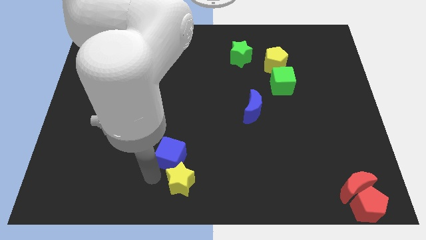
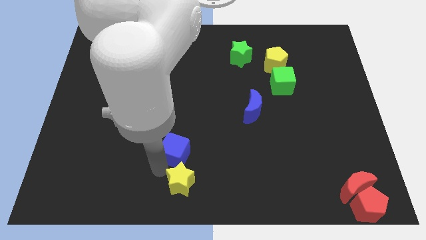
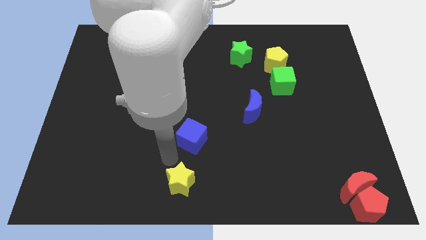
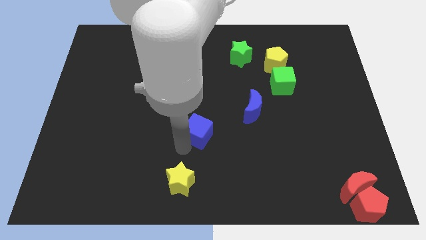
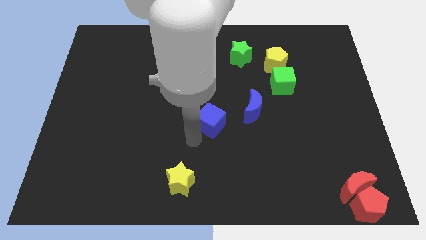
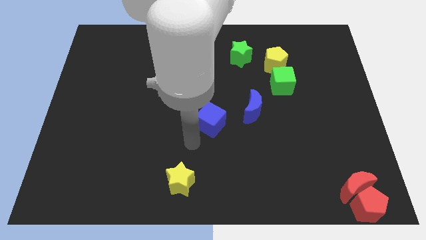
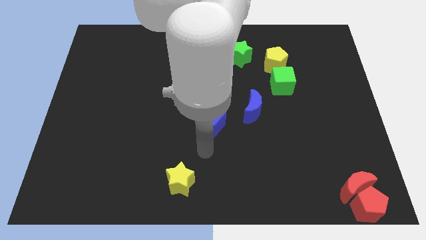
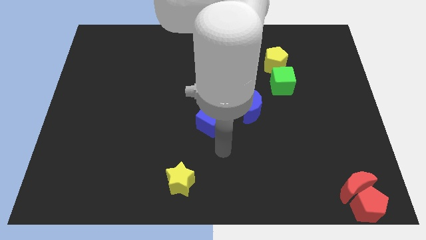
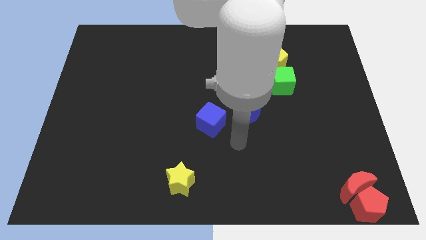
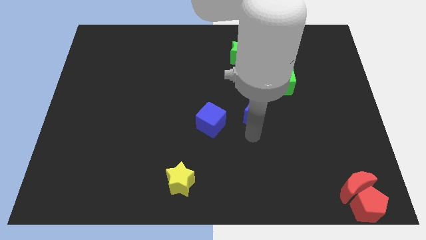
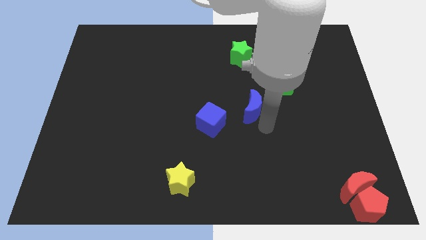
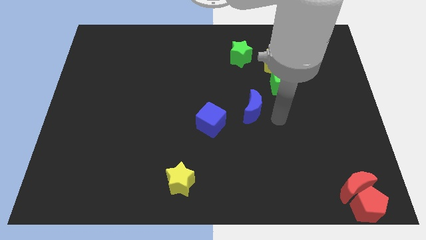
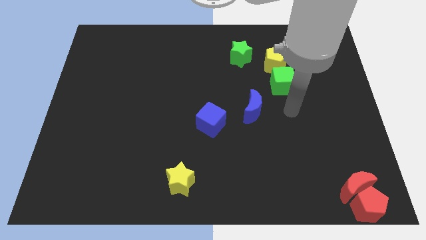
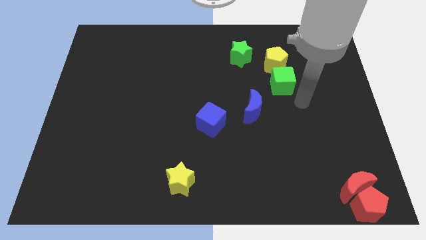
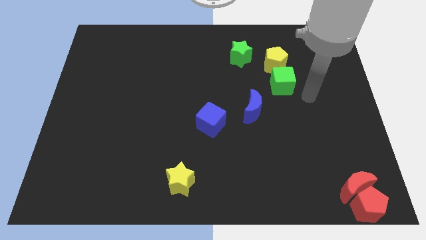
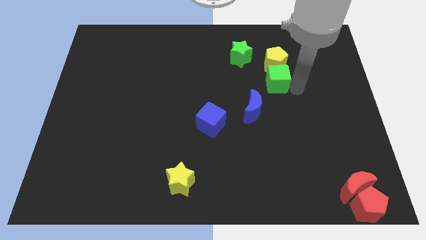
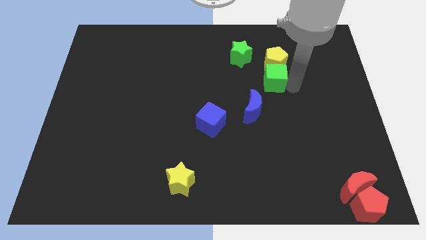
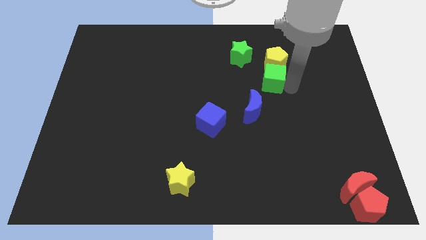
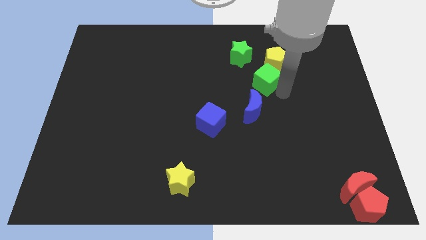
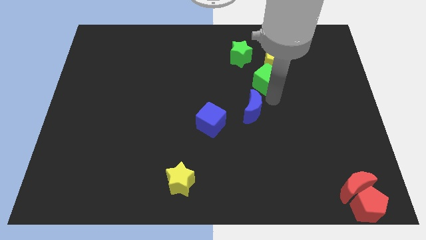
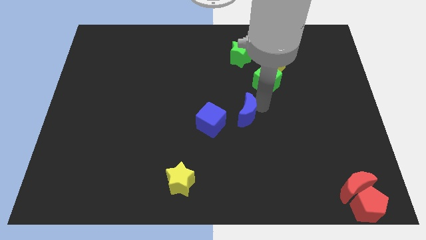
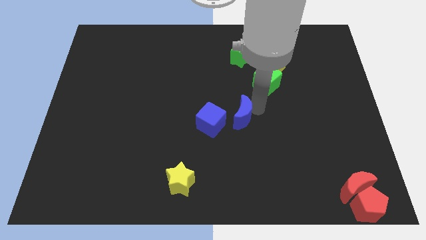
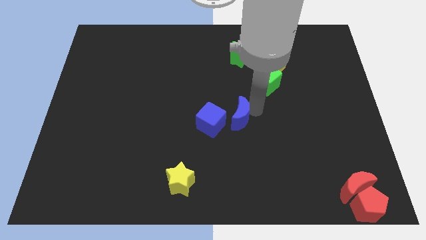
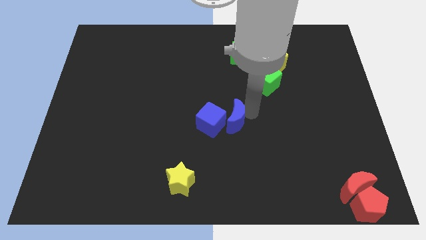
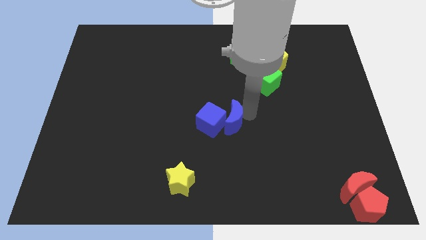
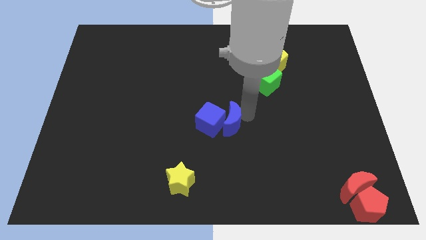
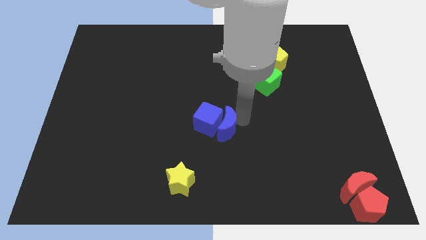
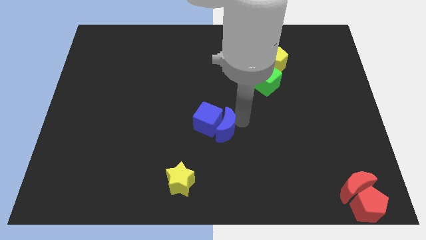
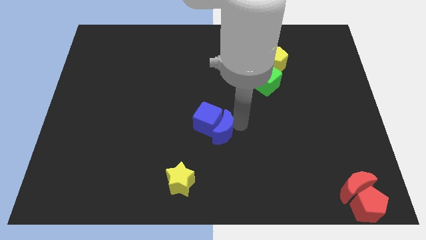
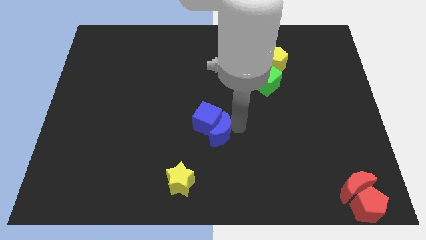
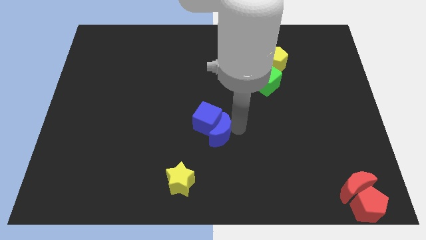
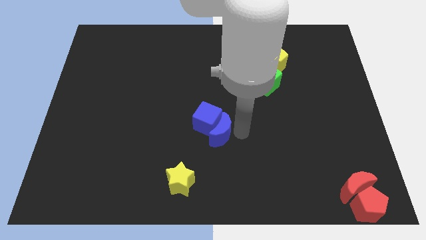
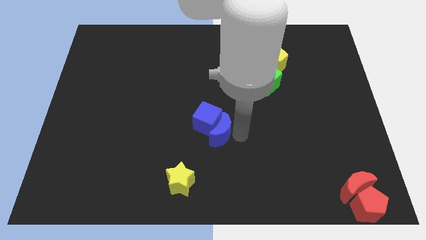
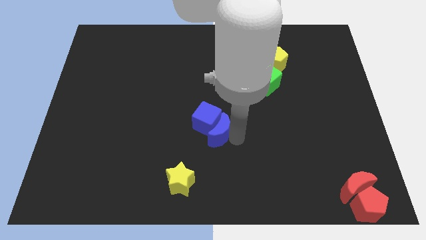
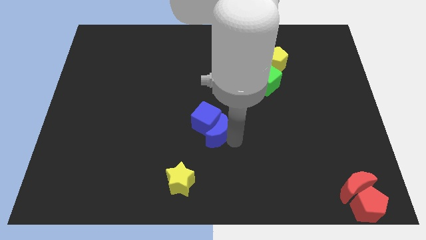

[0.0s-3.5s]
move the blue cube and the blue moon close to each other

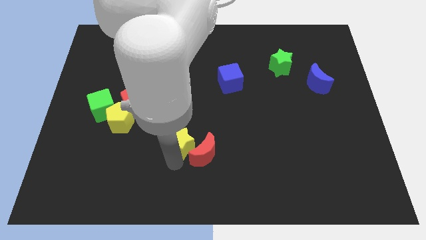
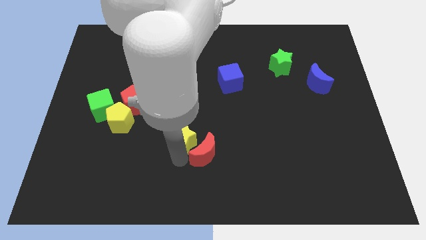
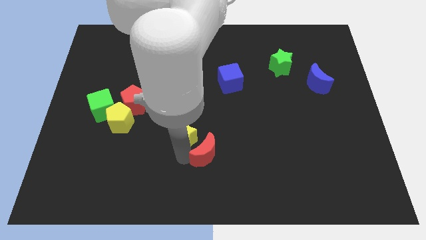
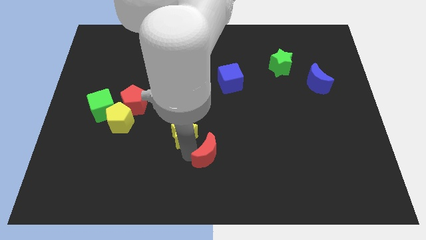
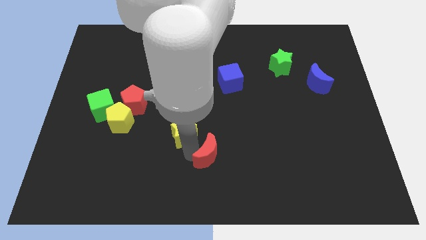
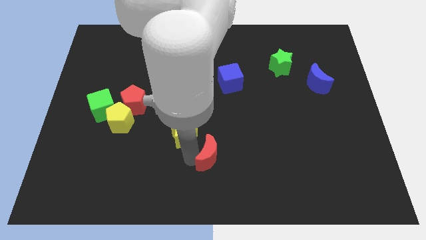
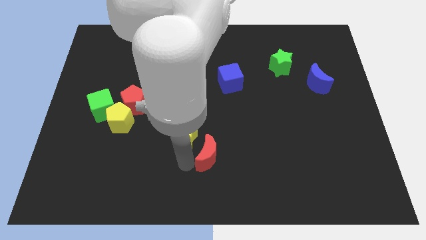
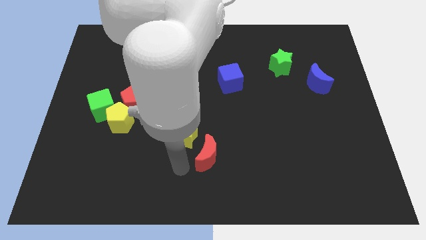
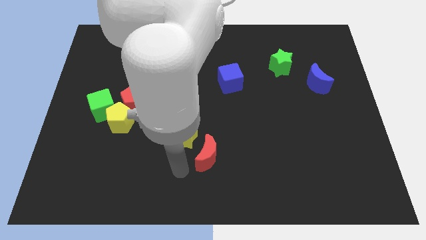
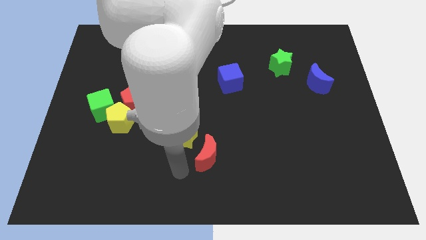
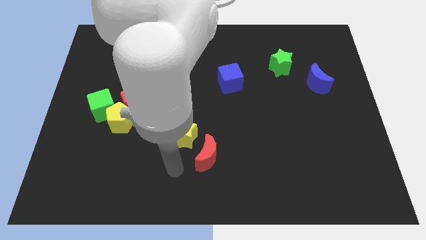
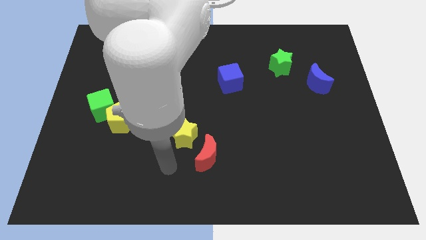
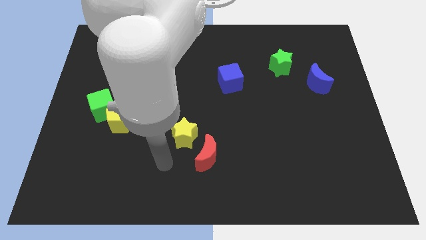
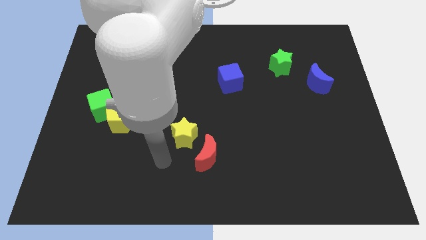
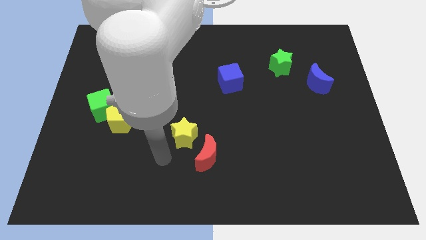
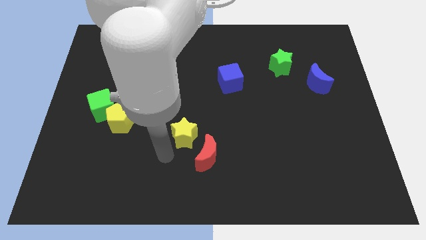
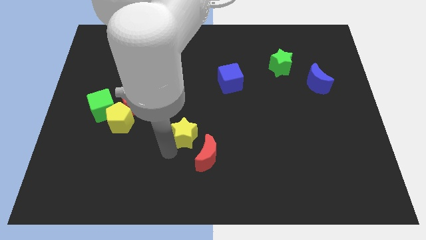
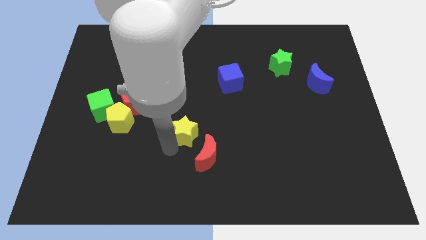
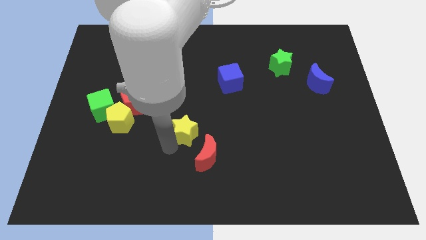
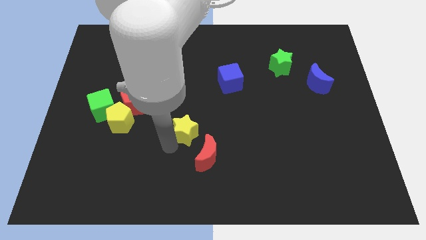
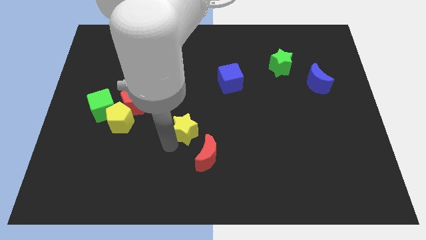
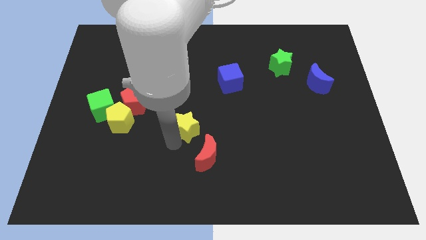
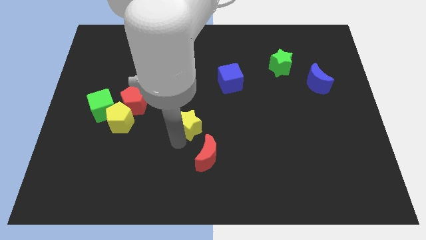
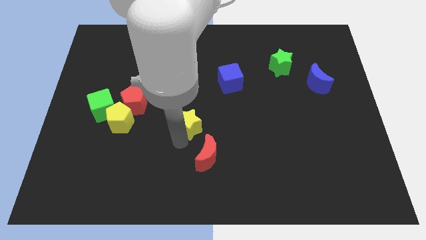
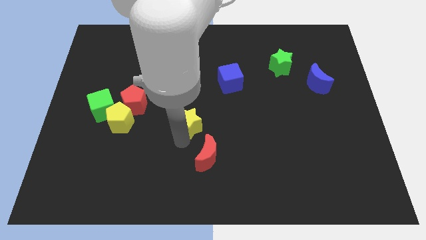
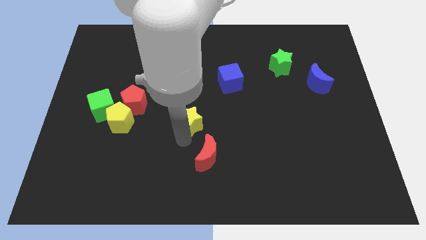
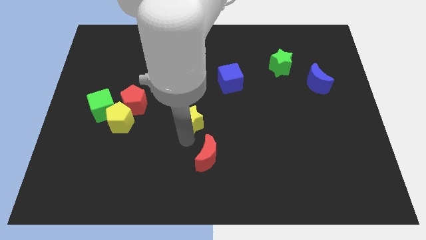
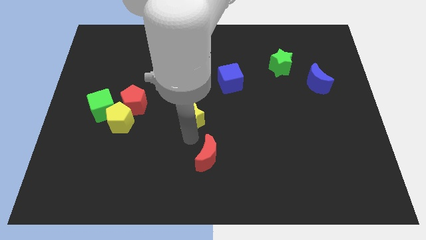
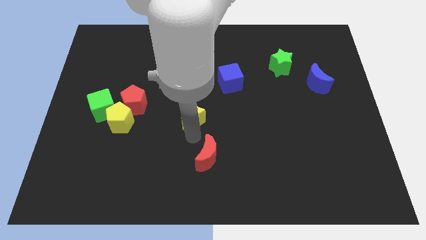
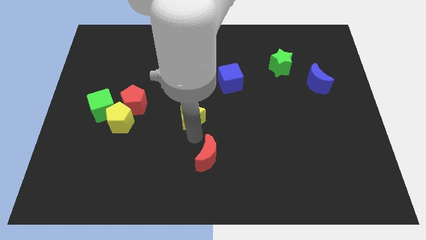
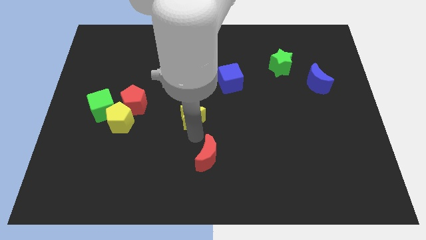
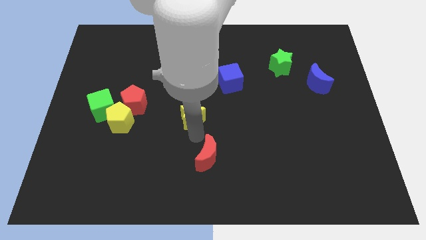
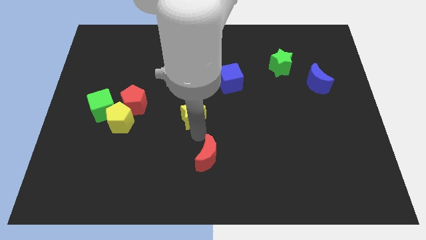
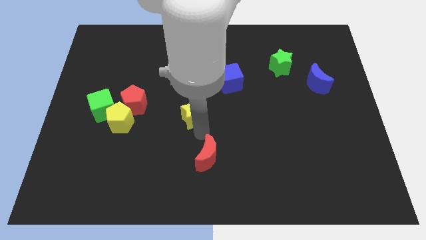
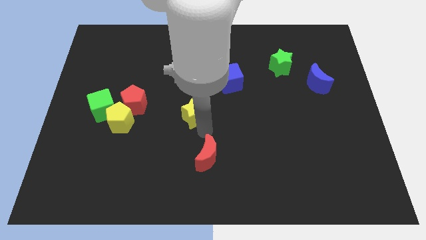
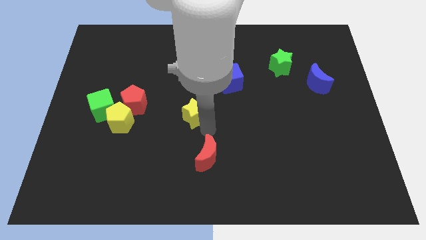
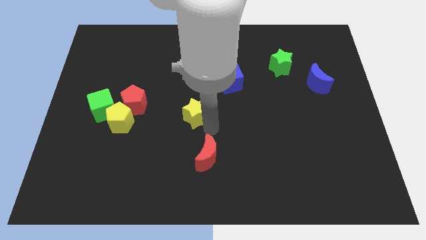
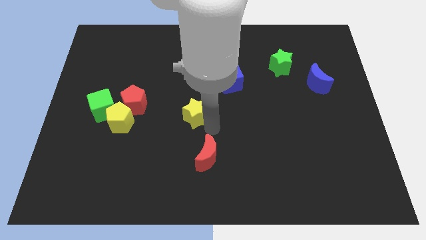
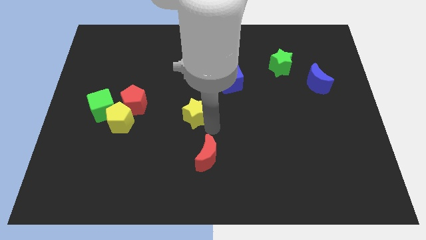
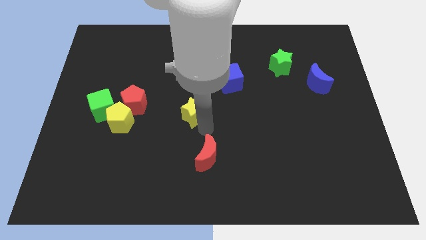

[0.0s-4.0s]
place the yellow star above the red crescent

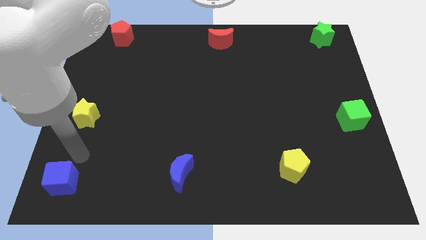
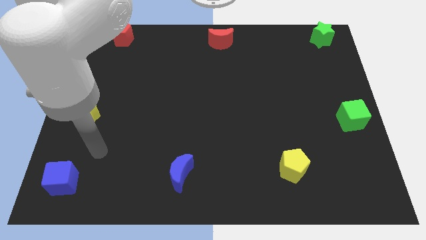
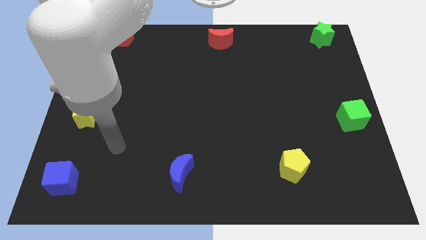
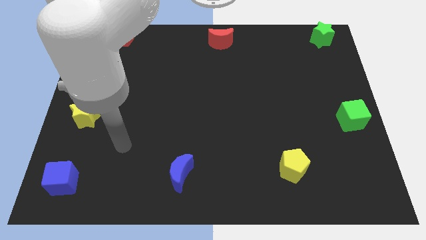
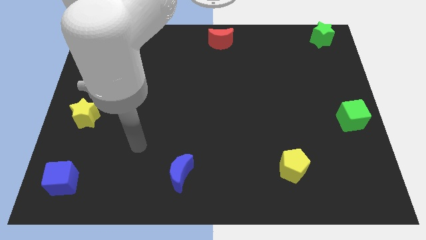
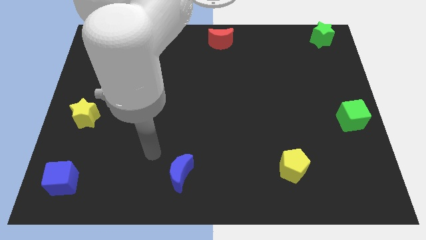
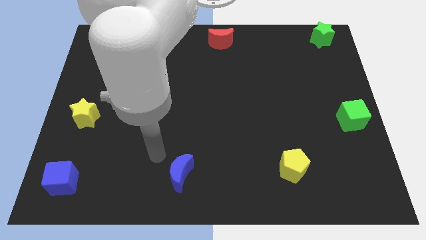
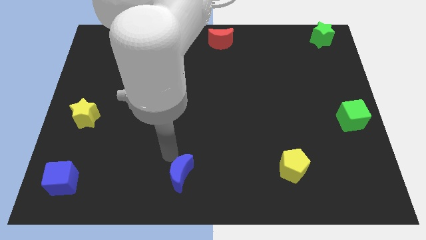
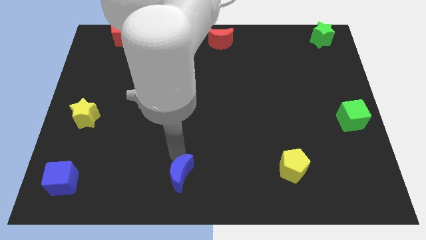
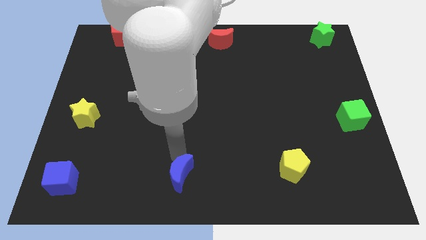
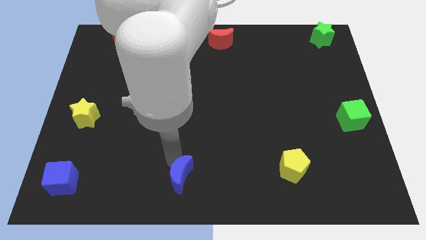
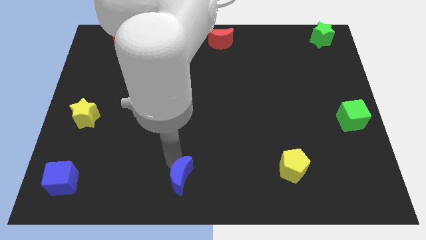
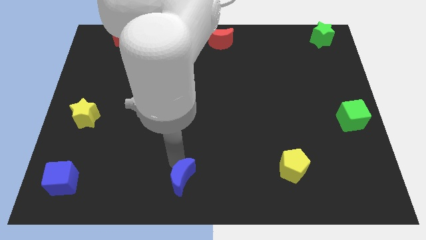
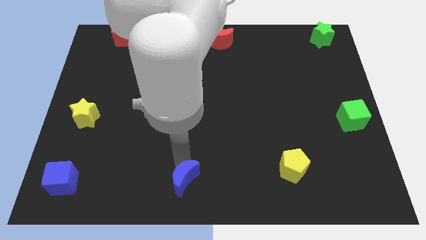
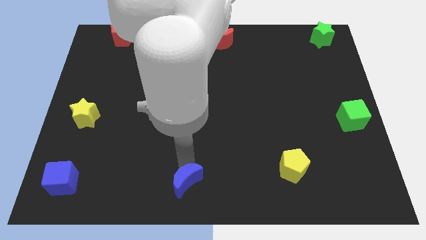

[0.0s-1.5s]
move your arm close to the blue moon
